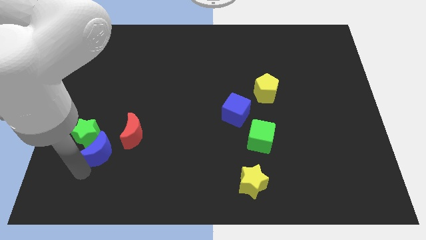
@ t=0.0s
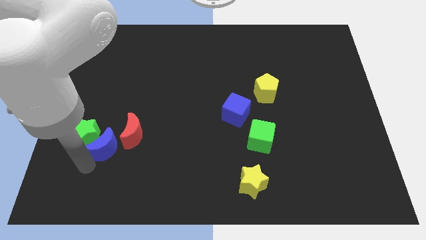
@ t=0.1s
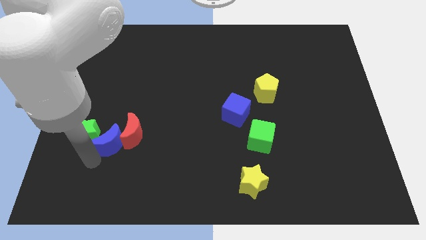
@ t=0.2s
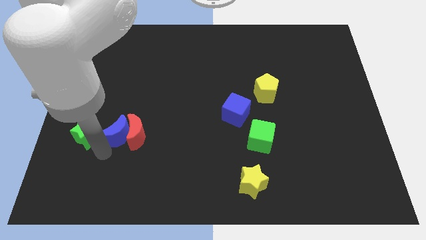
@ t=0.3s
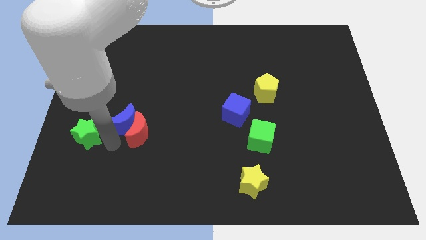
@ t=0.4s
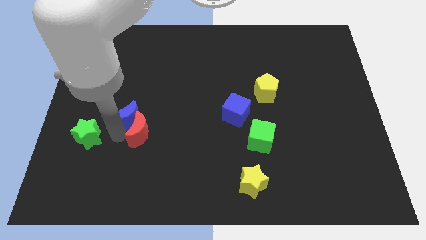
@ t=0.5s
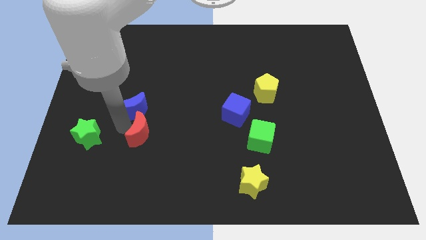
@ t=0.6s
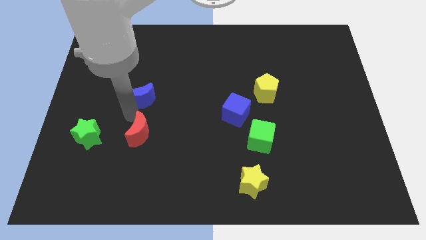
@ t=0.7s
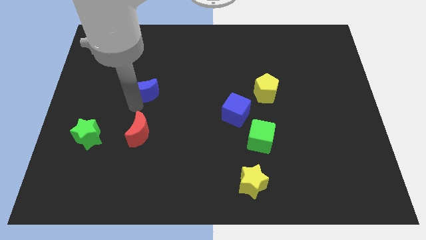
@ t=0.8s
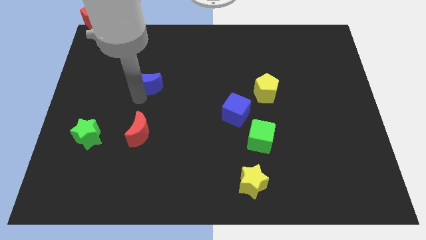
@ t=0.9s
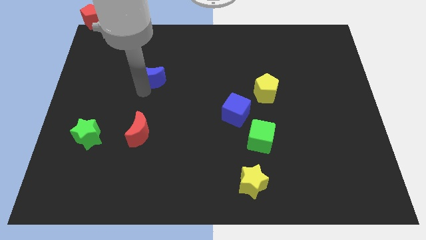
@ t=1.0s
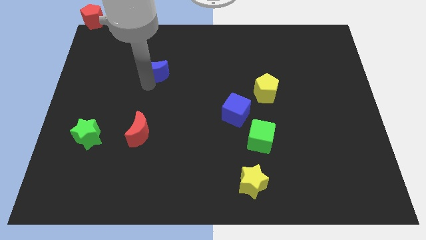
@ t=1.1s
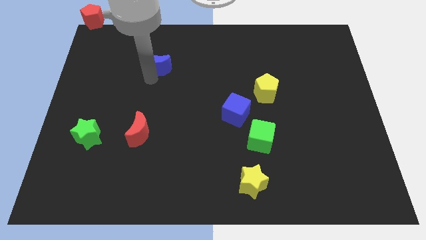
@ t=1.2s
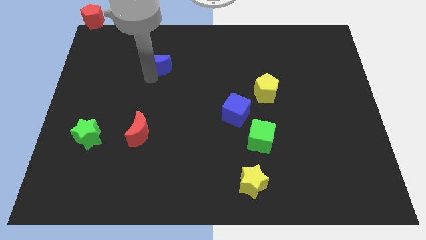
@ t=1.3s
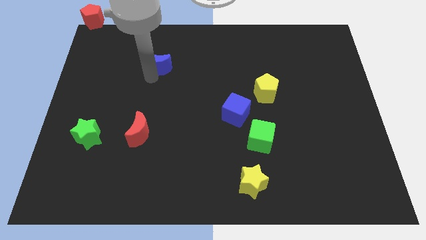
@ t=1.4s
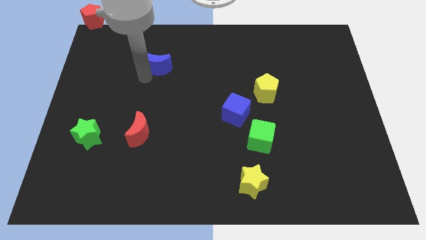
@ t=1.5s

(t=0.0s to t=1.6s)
move blue moon diagonally top left to the blue cube

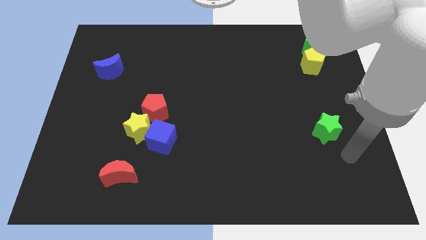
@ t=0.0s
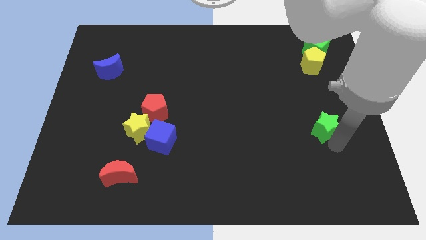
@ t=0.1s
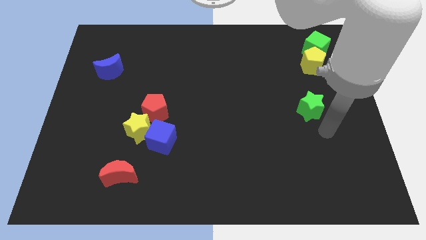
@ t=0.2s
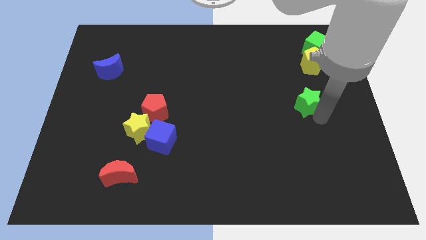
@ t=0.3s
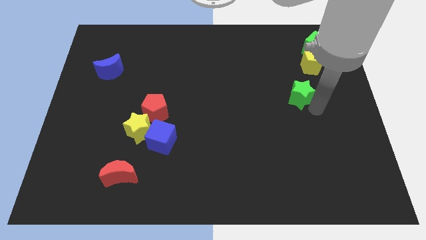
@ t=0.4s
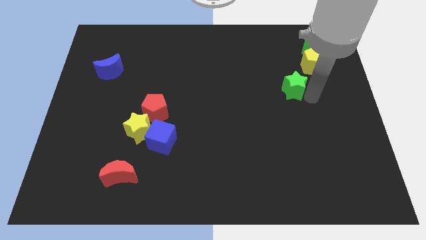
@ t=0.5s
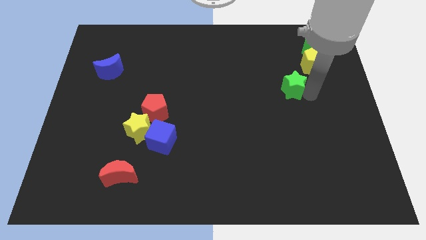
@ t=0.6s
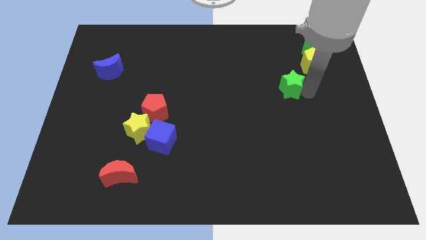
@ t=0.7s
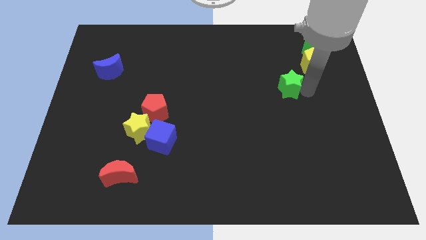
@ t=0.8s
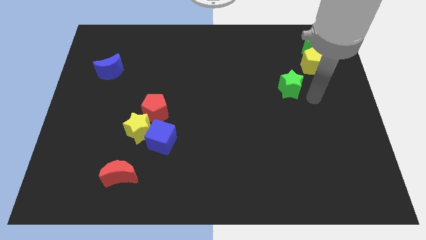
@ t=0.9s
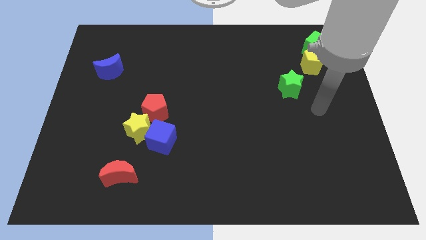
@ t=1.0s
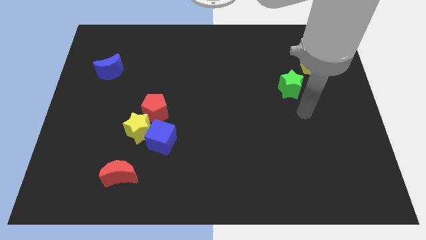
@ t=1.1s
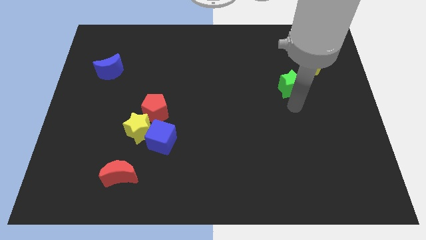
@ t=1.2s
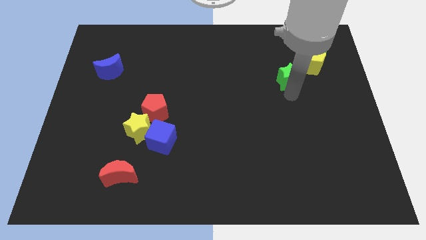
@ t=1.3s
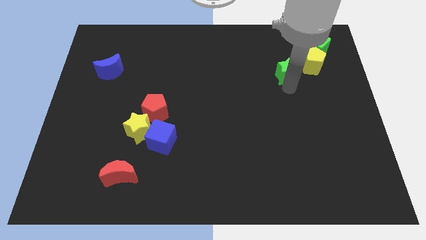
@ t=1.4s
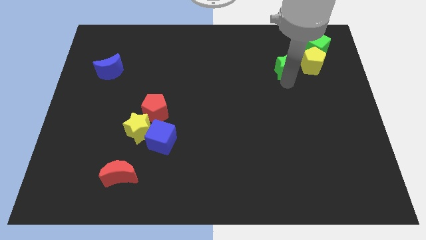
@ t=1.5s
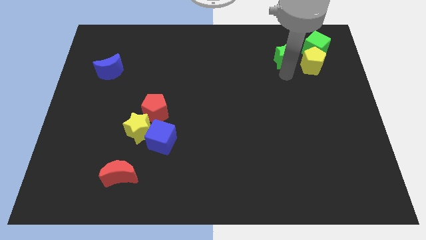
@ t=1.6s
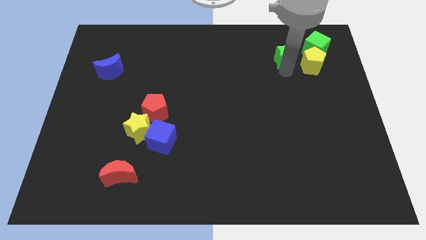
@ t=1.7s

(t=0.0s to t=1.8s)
push the green star left to the yellow pentagon

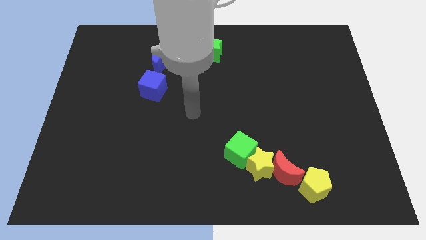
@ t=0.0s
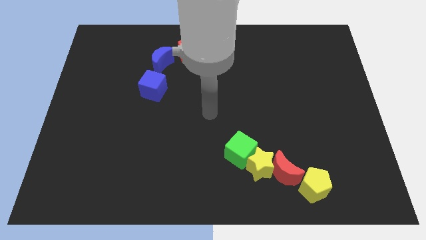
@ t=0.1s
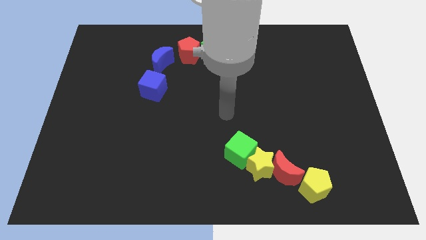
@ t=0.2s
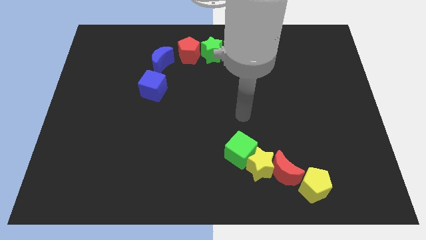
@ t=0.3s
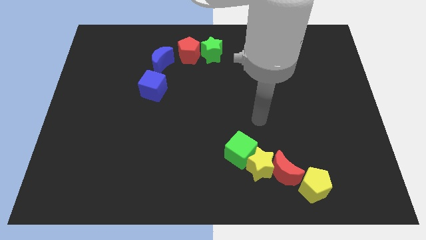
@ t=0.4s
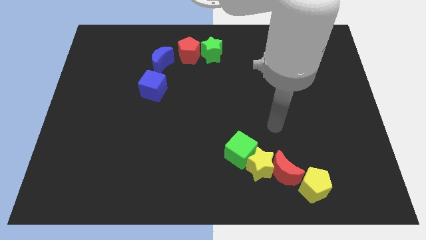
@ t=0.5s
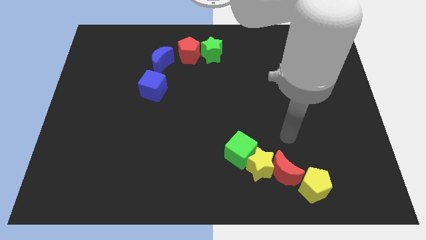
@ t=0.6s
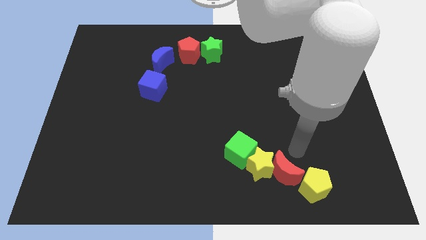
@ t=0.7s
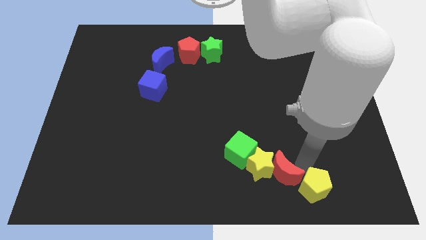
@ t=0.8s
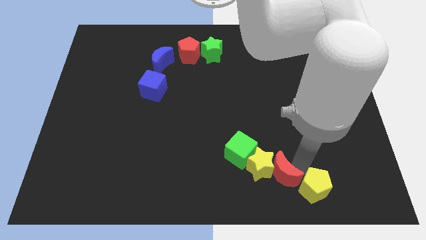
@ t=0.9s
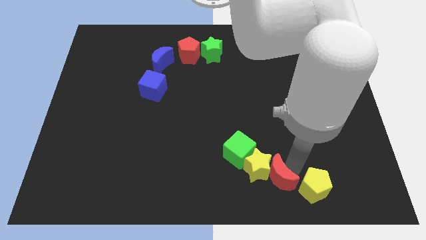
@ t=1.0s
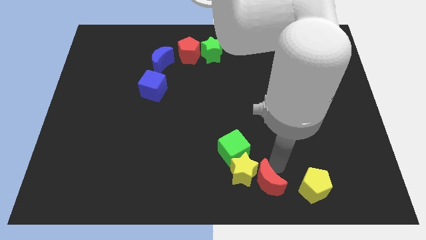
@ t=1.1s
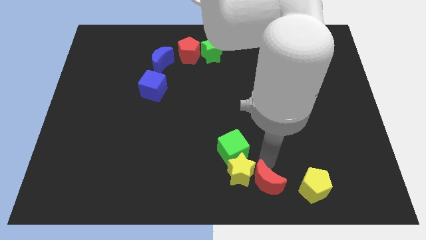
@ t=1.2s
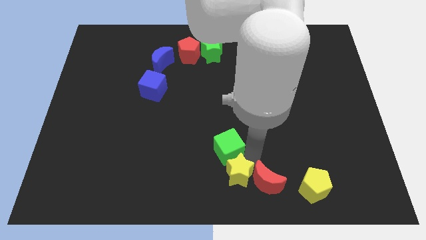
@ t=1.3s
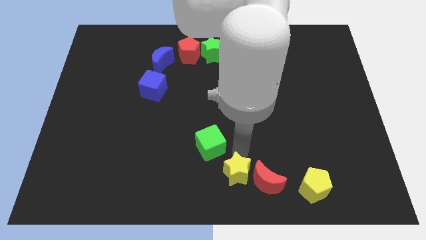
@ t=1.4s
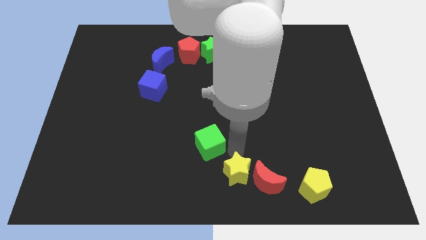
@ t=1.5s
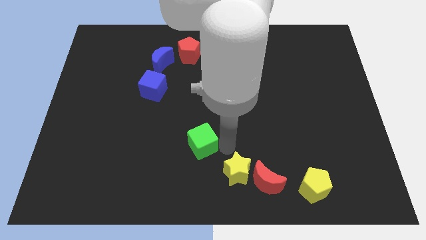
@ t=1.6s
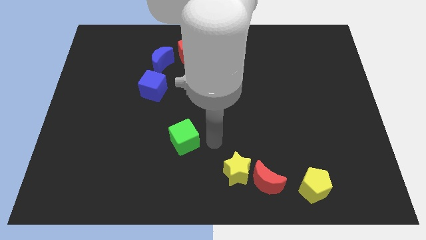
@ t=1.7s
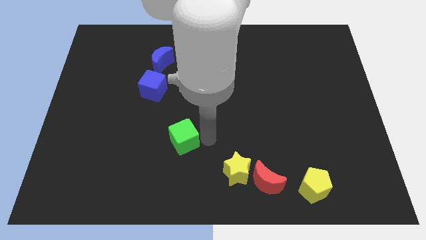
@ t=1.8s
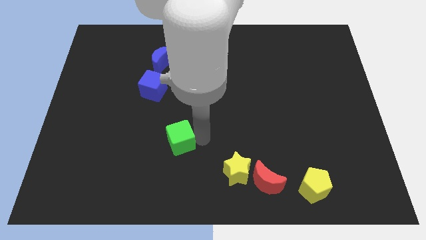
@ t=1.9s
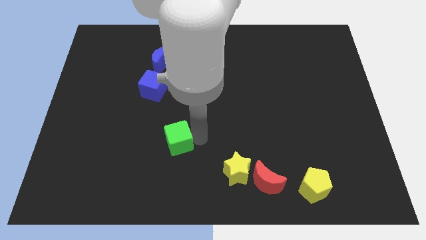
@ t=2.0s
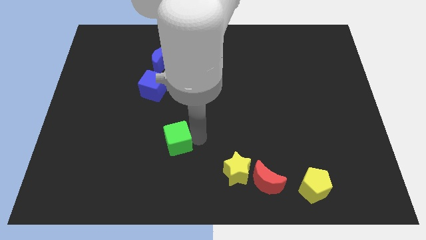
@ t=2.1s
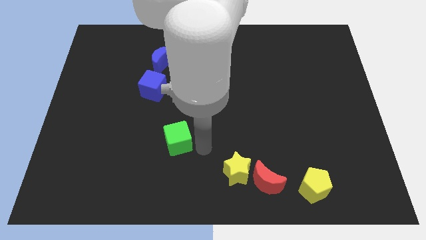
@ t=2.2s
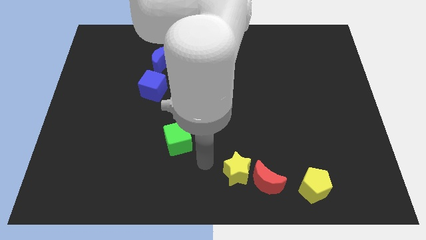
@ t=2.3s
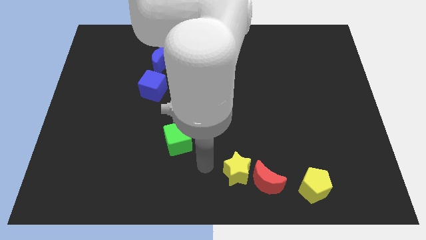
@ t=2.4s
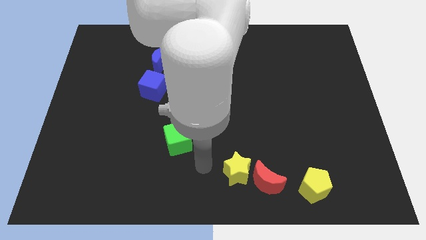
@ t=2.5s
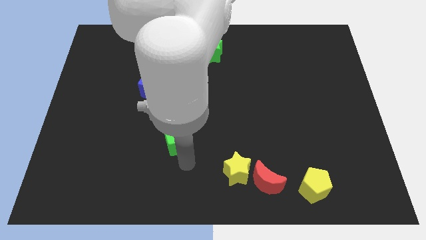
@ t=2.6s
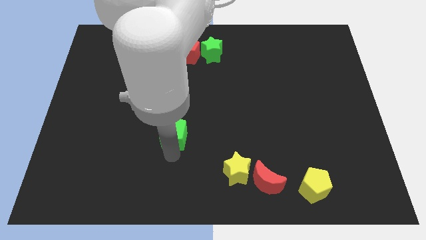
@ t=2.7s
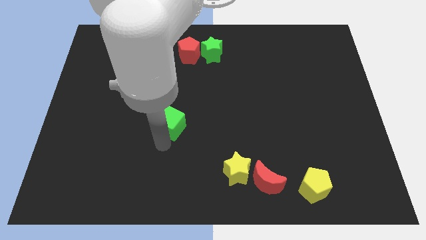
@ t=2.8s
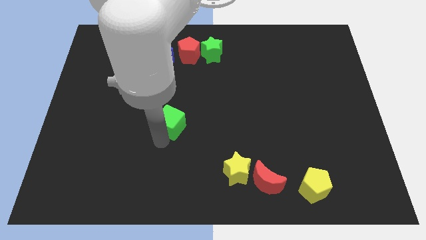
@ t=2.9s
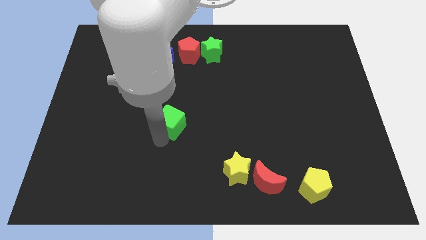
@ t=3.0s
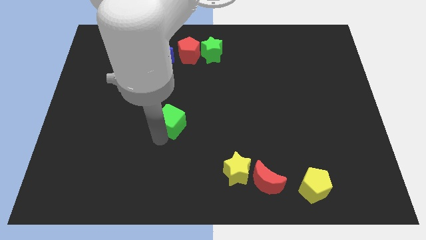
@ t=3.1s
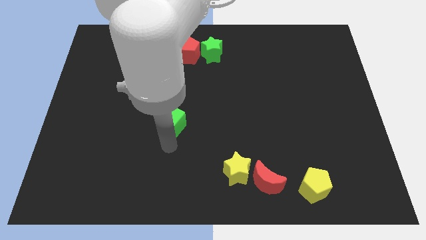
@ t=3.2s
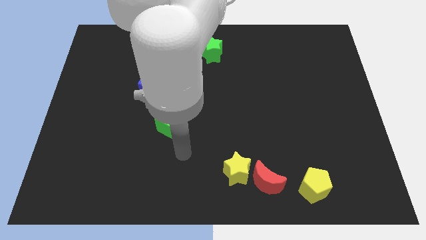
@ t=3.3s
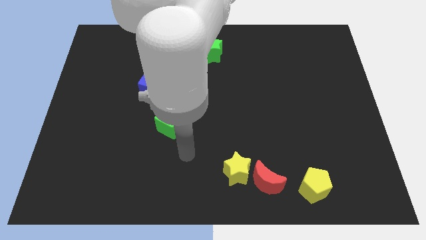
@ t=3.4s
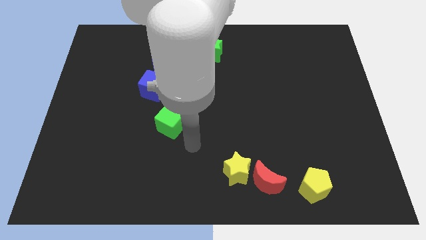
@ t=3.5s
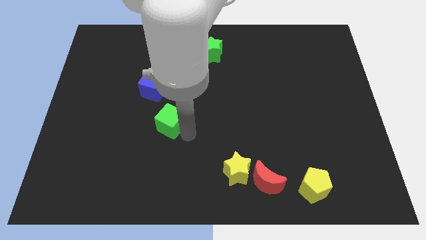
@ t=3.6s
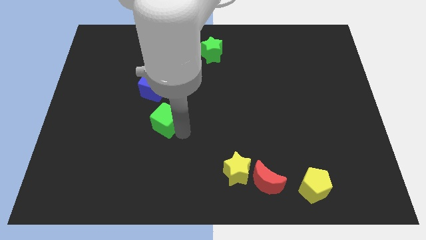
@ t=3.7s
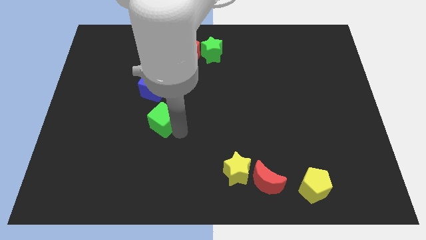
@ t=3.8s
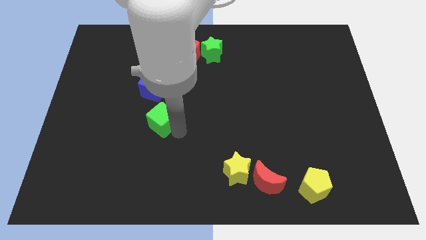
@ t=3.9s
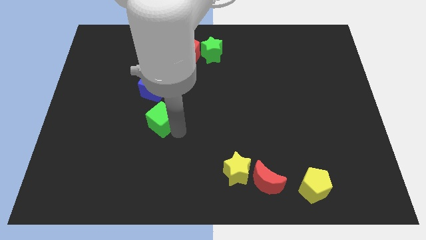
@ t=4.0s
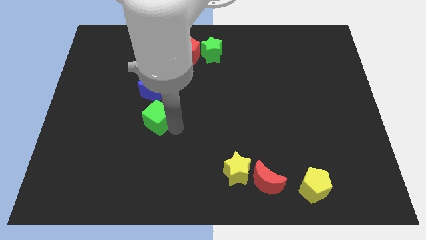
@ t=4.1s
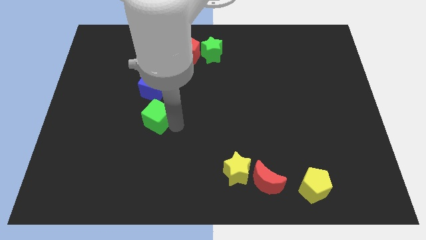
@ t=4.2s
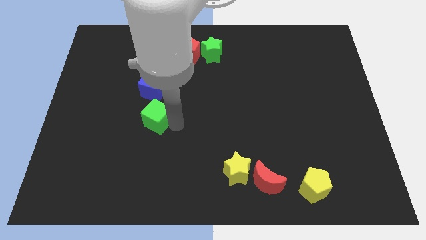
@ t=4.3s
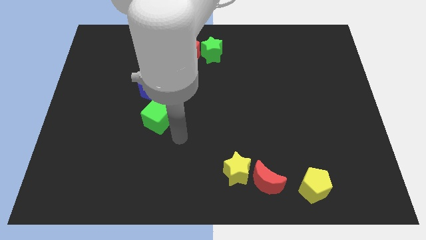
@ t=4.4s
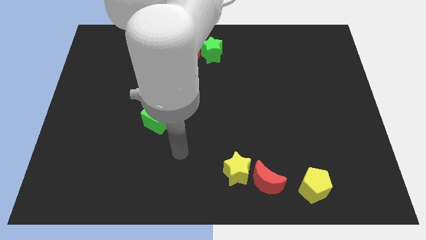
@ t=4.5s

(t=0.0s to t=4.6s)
push the green cube away from the yellow star below blue cube

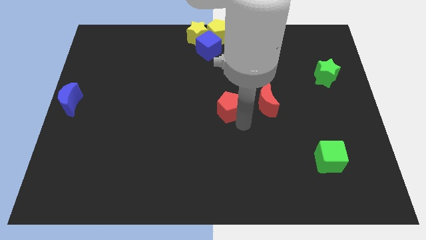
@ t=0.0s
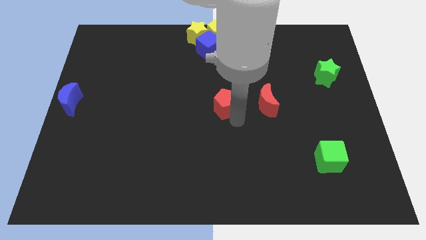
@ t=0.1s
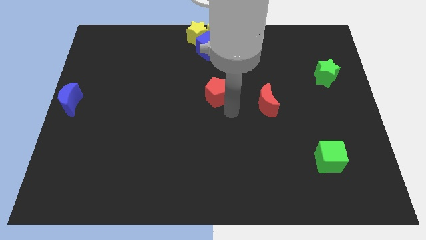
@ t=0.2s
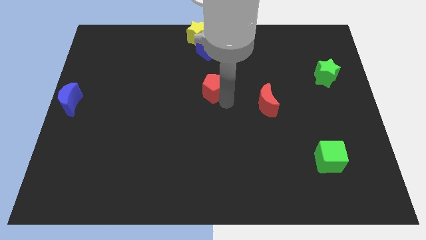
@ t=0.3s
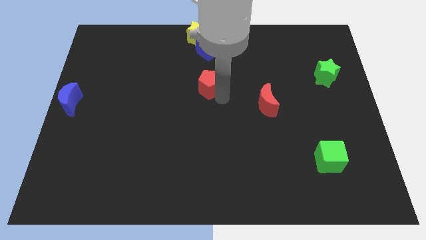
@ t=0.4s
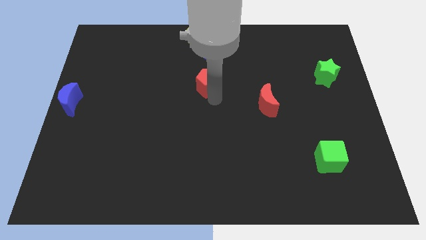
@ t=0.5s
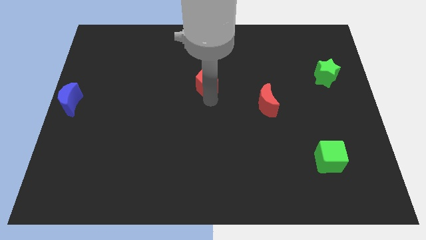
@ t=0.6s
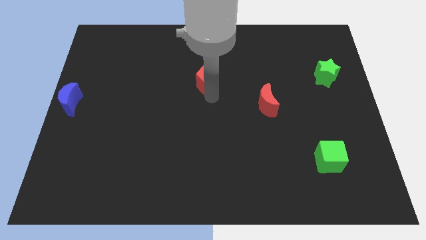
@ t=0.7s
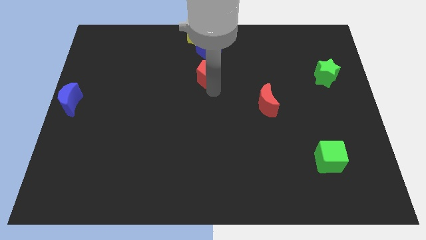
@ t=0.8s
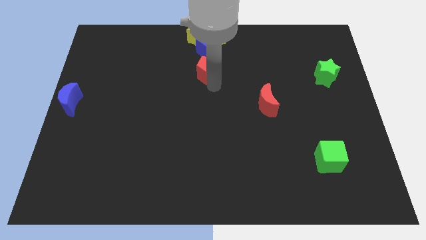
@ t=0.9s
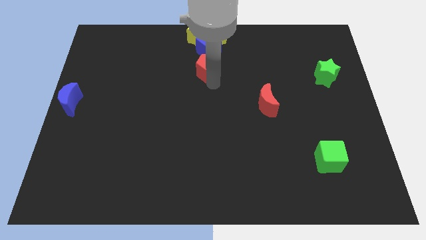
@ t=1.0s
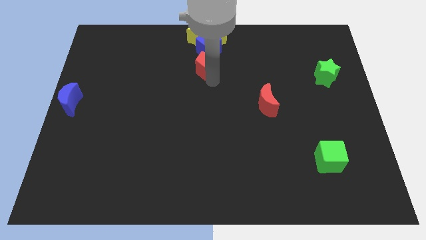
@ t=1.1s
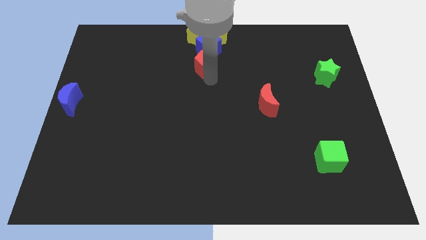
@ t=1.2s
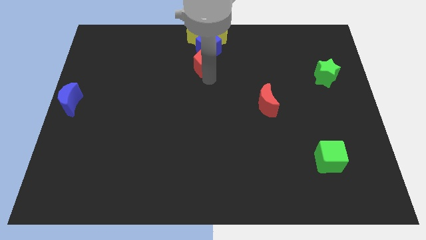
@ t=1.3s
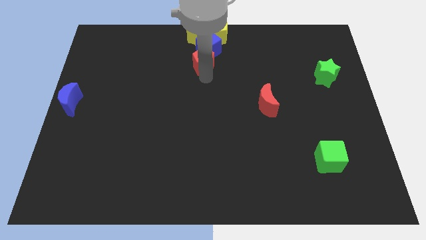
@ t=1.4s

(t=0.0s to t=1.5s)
slide the red pentagon to the top center
